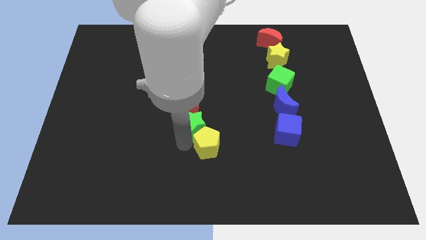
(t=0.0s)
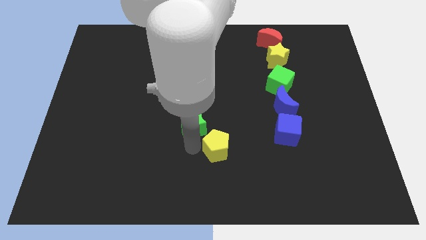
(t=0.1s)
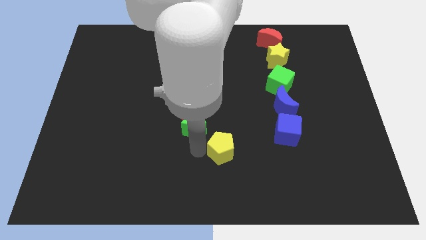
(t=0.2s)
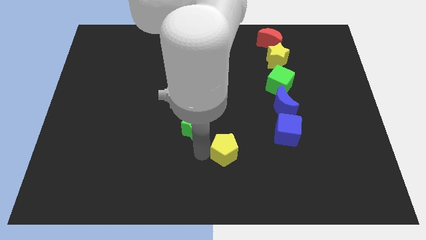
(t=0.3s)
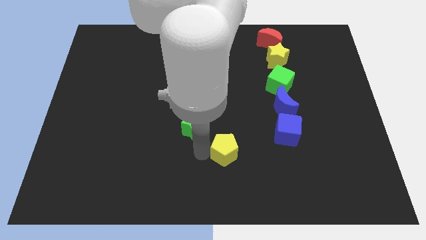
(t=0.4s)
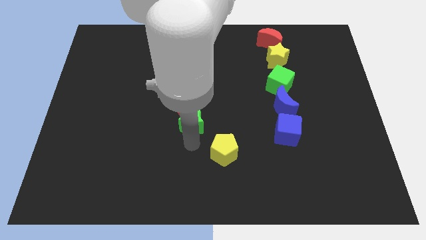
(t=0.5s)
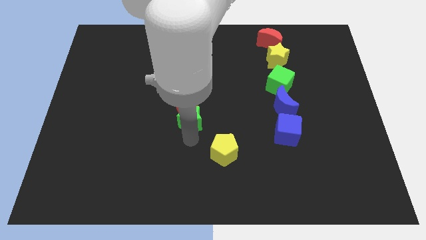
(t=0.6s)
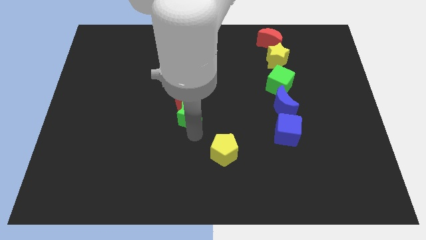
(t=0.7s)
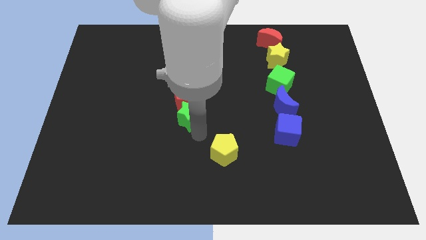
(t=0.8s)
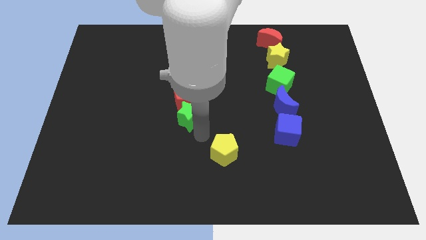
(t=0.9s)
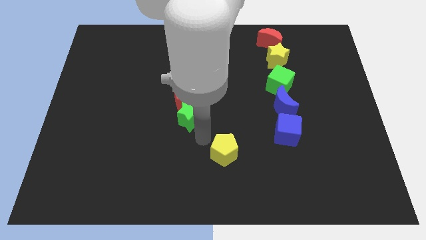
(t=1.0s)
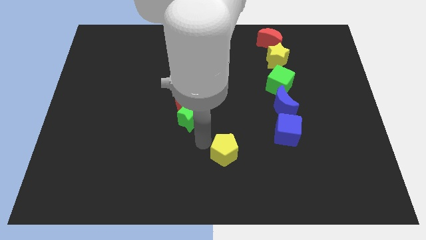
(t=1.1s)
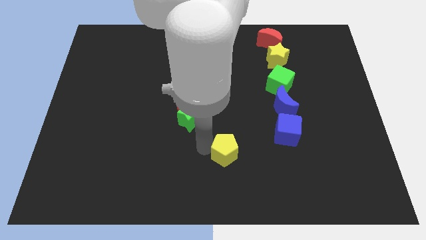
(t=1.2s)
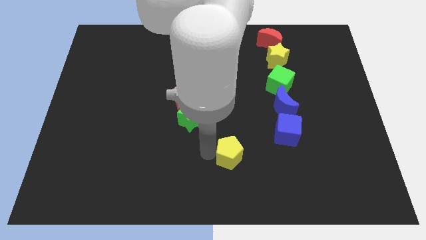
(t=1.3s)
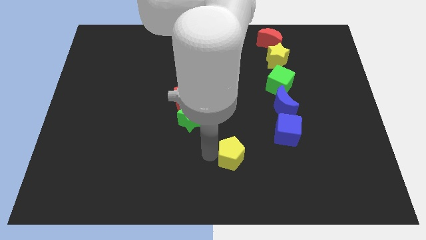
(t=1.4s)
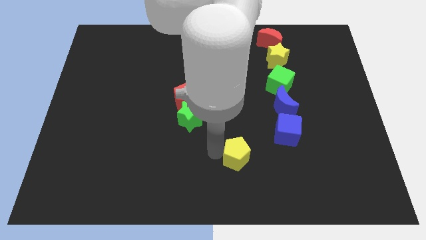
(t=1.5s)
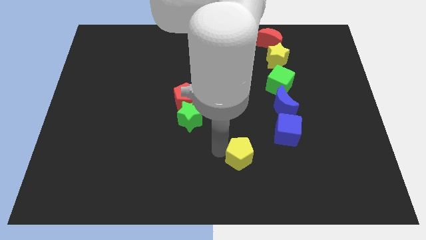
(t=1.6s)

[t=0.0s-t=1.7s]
separate the yellow pentagon from the green star and the red pentagon

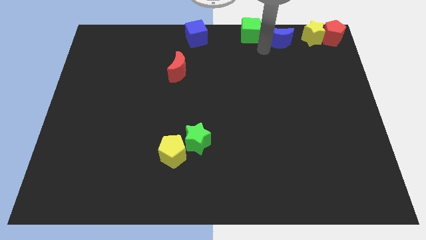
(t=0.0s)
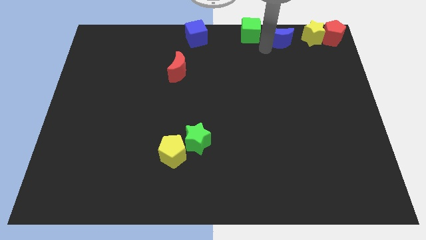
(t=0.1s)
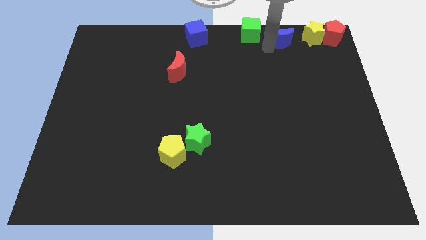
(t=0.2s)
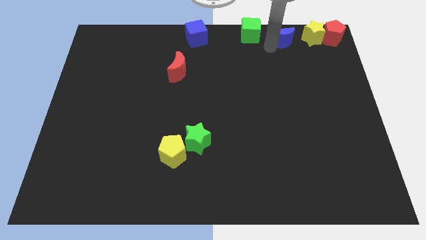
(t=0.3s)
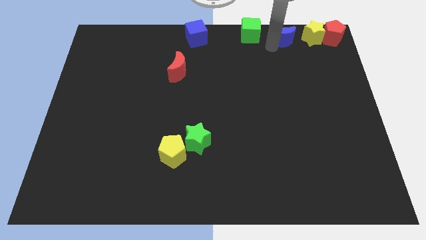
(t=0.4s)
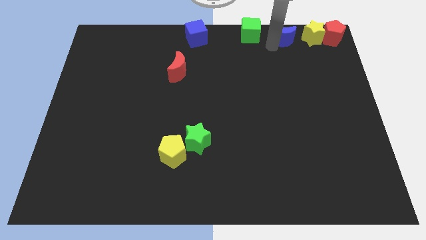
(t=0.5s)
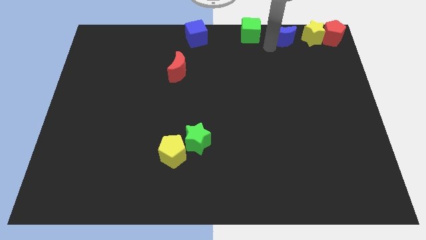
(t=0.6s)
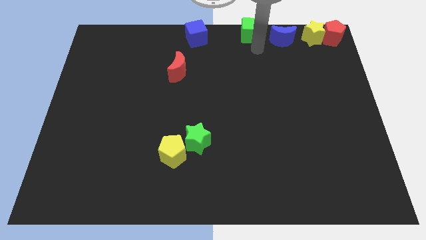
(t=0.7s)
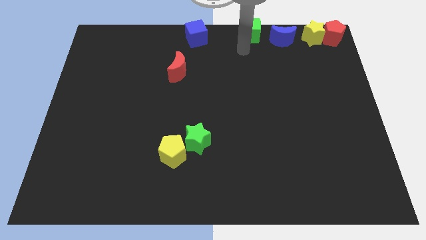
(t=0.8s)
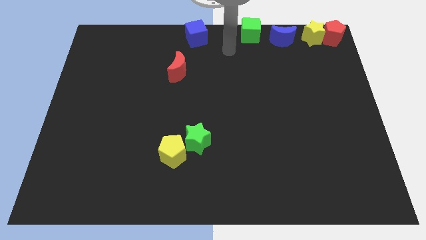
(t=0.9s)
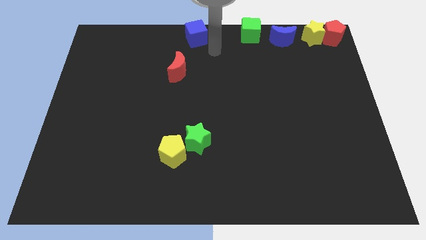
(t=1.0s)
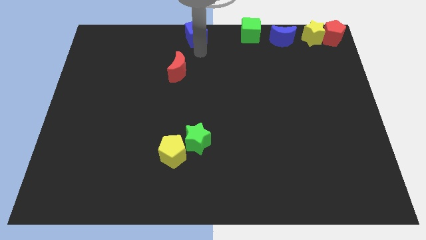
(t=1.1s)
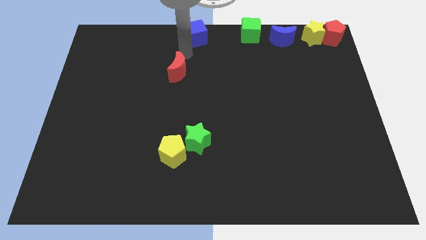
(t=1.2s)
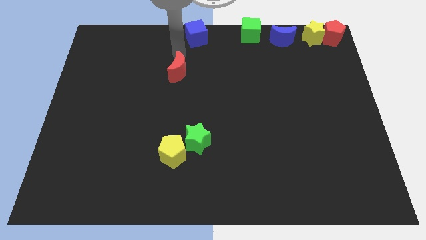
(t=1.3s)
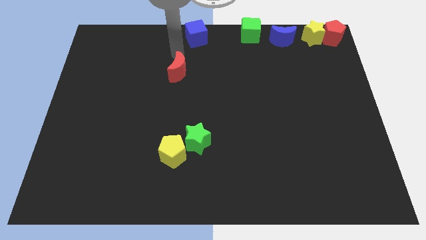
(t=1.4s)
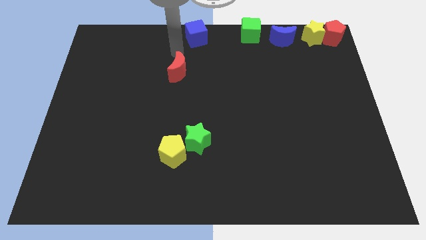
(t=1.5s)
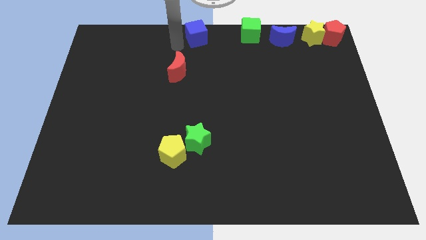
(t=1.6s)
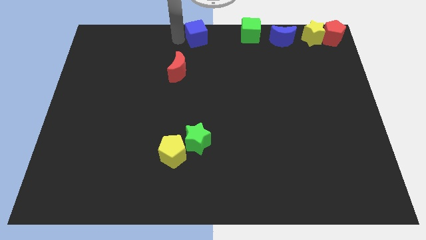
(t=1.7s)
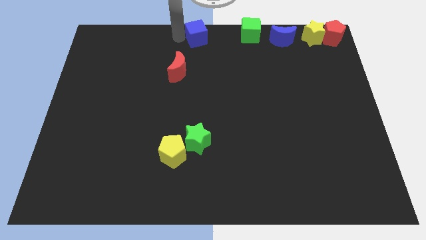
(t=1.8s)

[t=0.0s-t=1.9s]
place your arm close to the left side of the blue cube

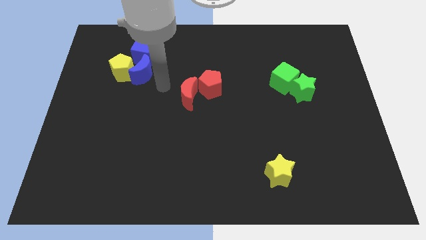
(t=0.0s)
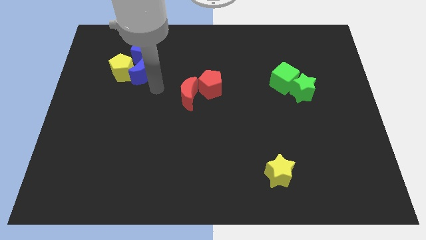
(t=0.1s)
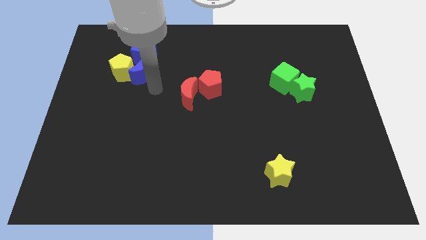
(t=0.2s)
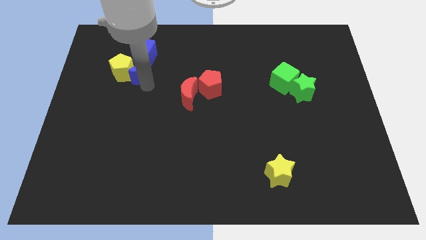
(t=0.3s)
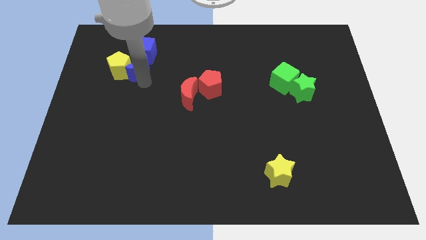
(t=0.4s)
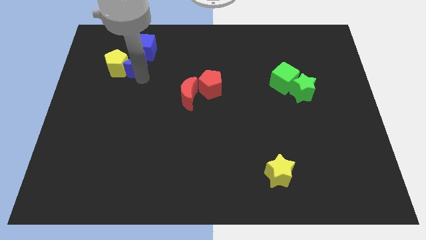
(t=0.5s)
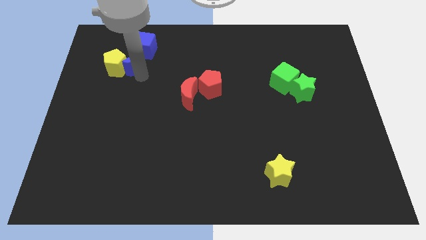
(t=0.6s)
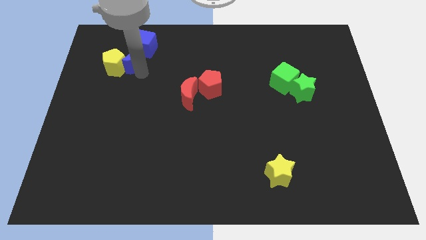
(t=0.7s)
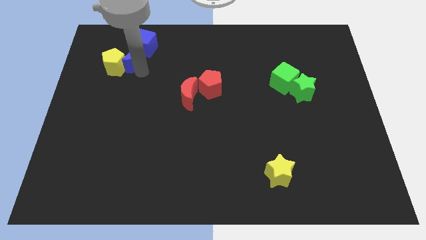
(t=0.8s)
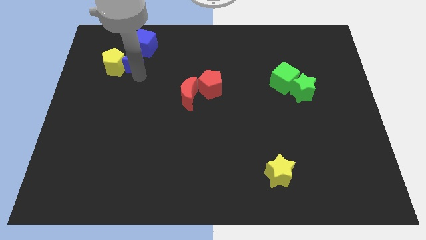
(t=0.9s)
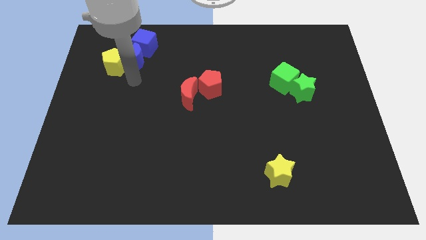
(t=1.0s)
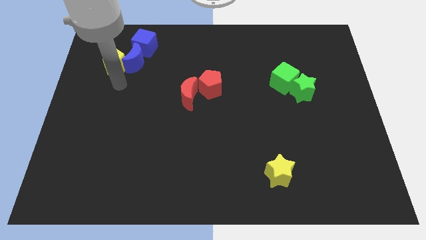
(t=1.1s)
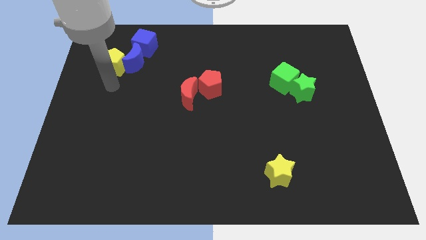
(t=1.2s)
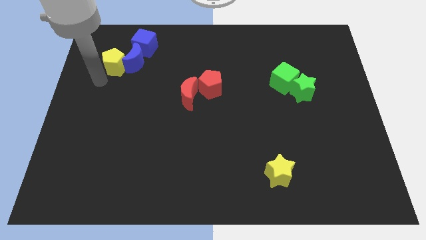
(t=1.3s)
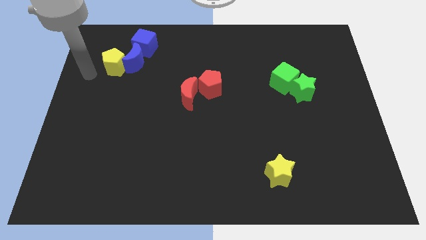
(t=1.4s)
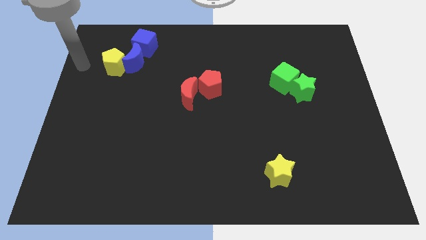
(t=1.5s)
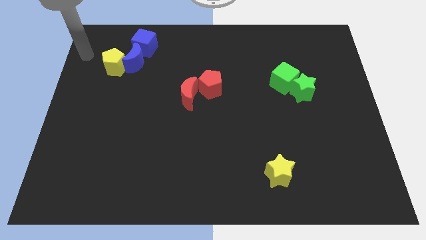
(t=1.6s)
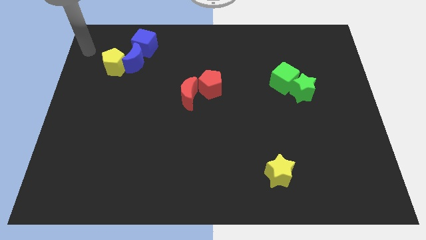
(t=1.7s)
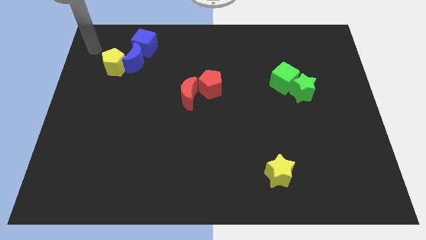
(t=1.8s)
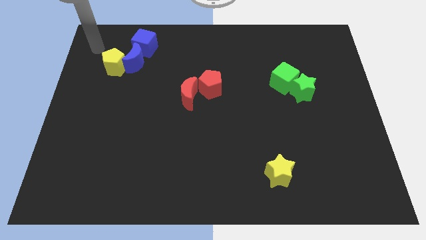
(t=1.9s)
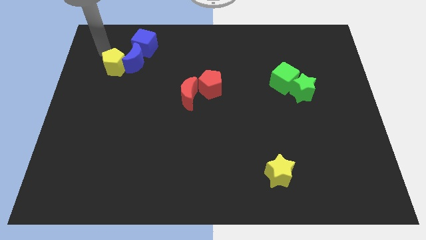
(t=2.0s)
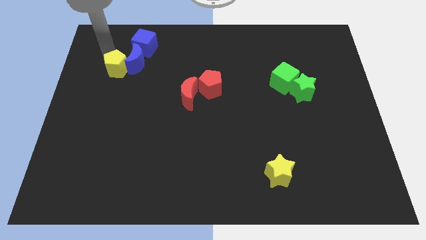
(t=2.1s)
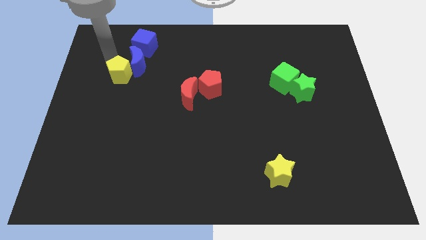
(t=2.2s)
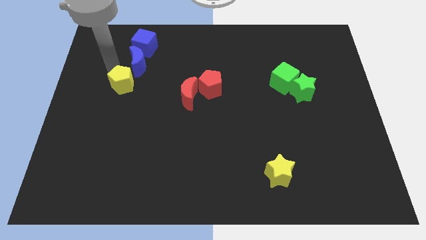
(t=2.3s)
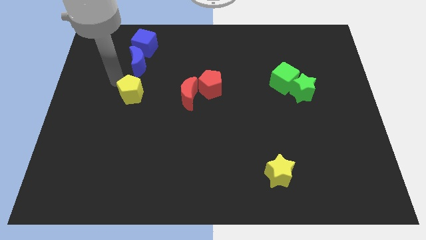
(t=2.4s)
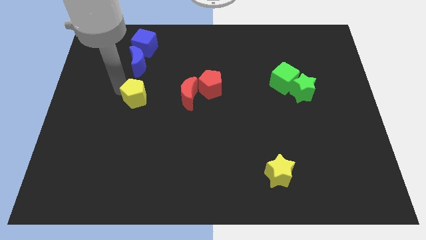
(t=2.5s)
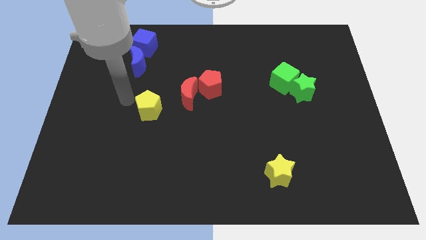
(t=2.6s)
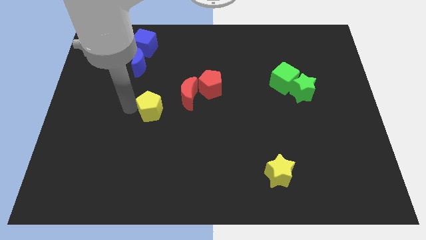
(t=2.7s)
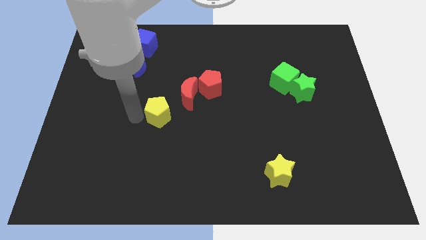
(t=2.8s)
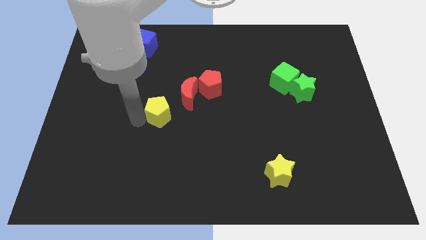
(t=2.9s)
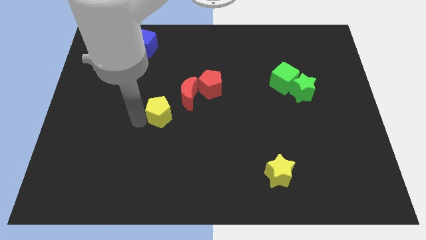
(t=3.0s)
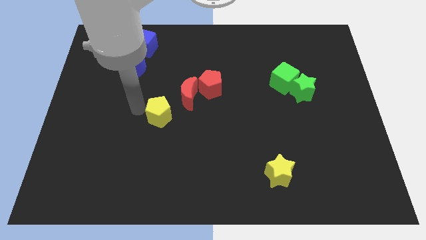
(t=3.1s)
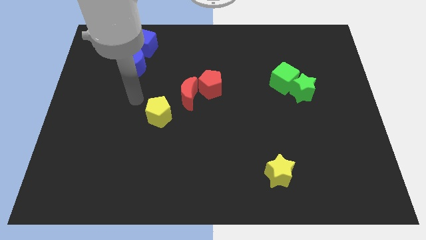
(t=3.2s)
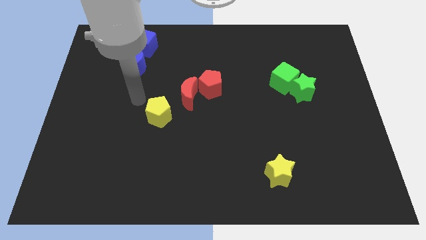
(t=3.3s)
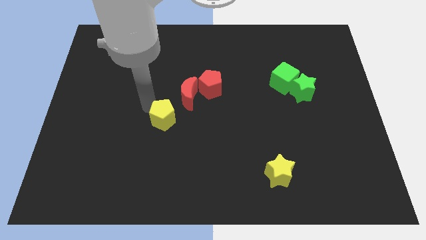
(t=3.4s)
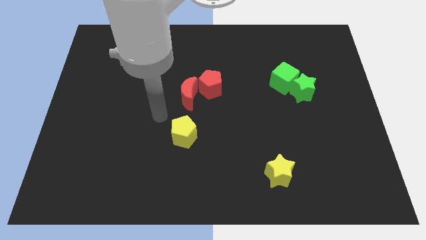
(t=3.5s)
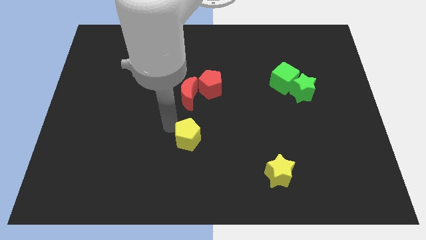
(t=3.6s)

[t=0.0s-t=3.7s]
move yellow pentagon below the red moon

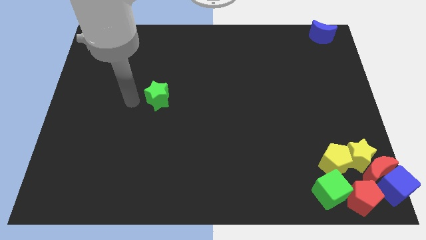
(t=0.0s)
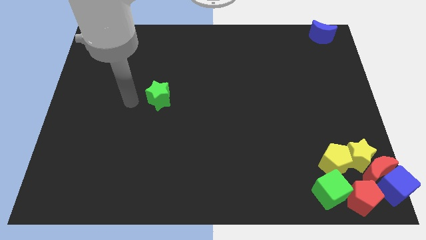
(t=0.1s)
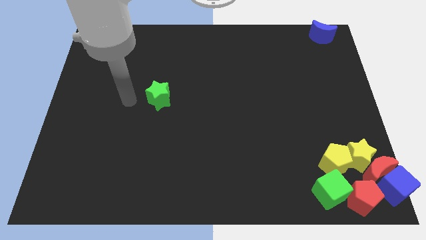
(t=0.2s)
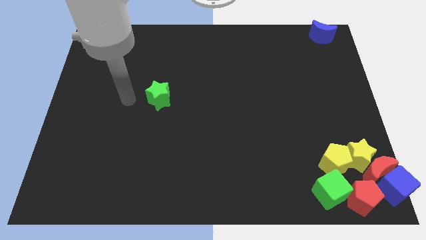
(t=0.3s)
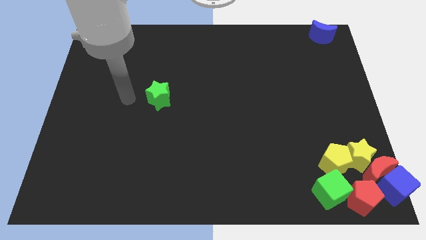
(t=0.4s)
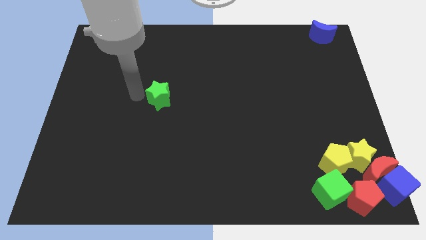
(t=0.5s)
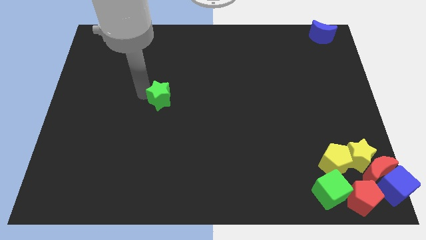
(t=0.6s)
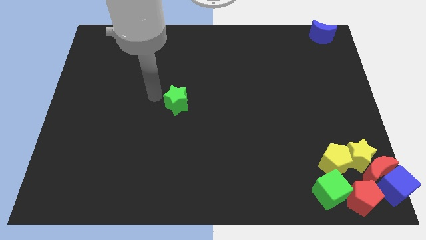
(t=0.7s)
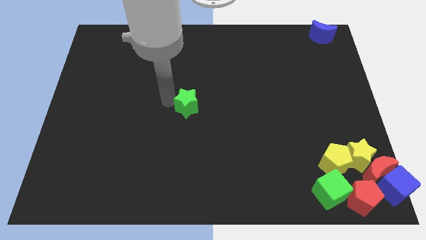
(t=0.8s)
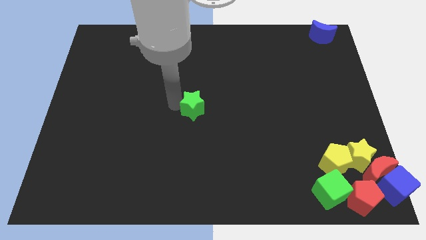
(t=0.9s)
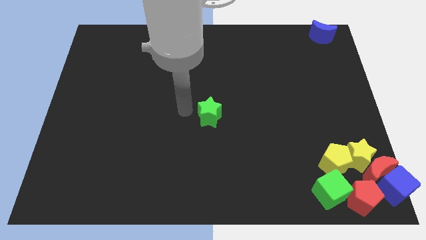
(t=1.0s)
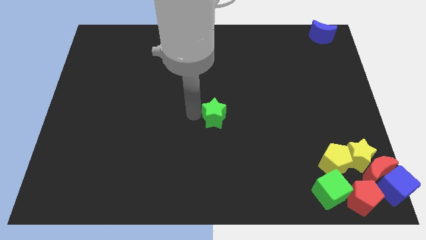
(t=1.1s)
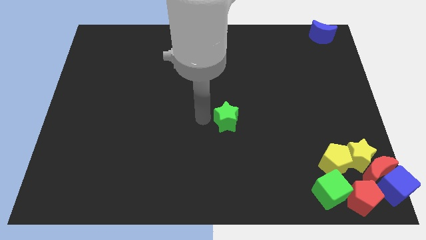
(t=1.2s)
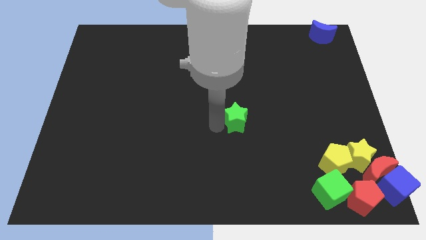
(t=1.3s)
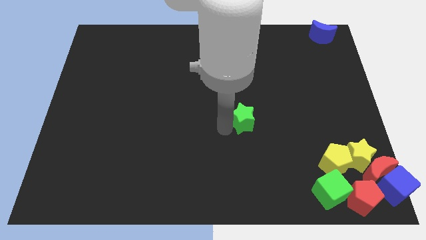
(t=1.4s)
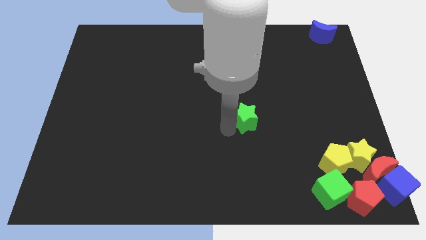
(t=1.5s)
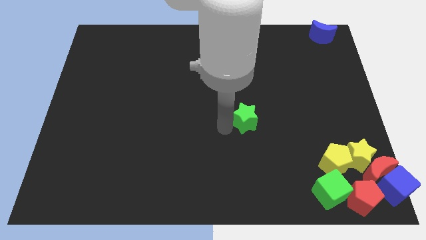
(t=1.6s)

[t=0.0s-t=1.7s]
push the green star towards the blocks at the bottom right corner of the board
